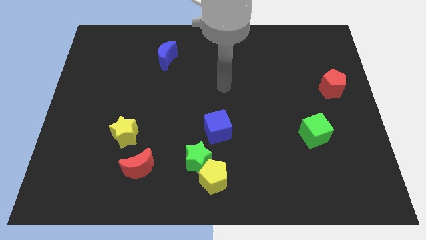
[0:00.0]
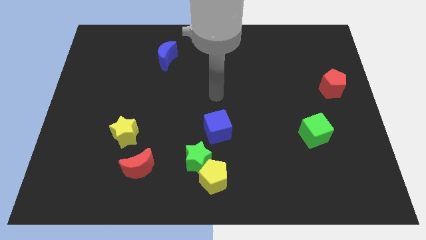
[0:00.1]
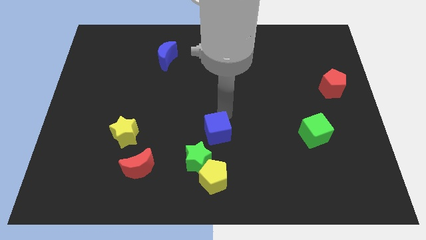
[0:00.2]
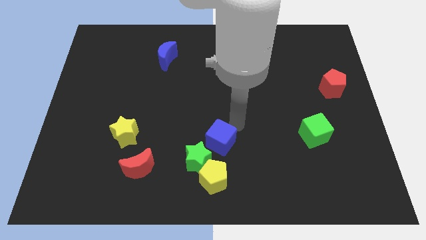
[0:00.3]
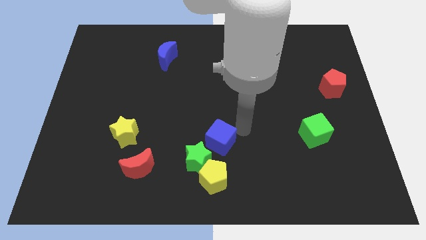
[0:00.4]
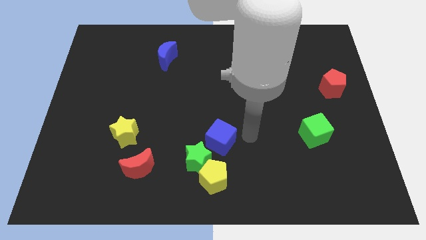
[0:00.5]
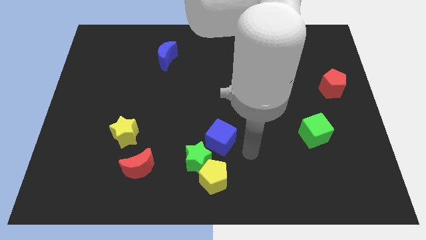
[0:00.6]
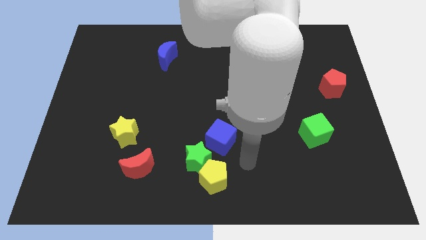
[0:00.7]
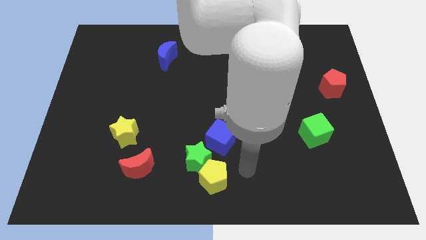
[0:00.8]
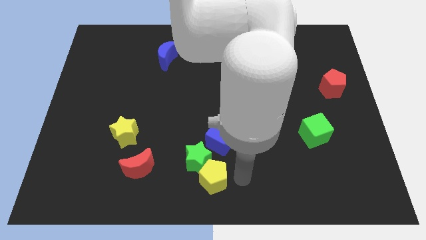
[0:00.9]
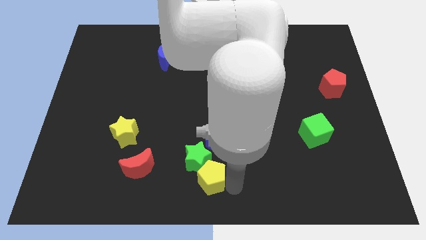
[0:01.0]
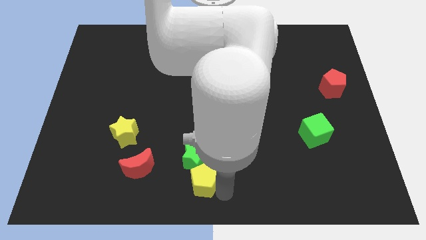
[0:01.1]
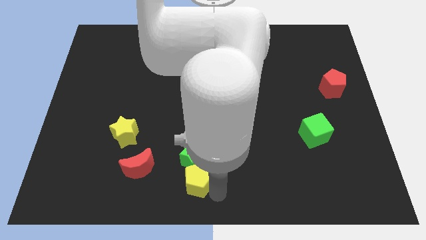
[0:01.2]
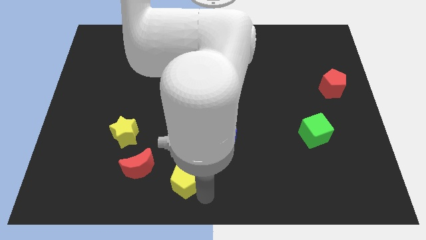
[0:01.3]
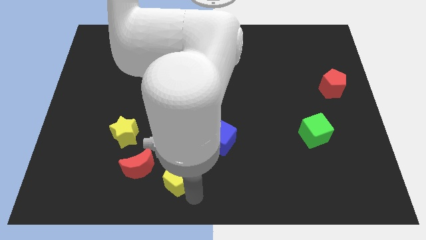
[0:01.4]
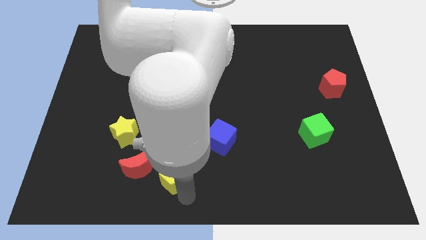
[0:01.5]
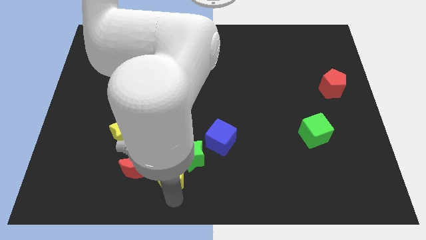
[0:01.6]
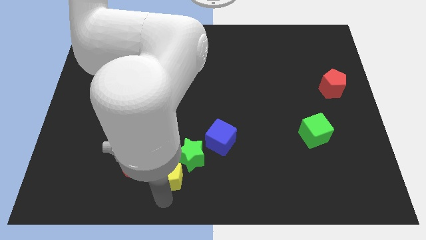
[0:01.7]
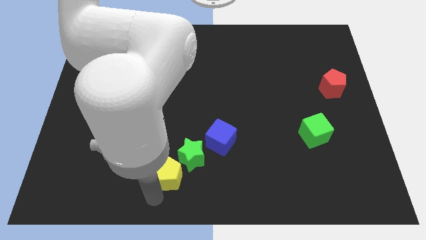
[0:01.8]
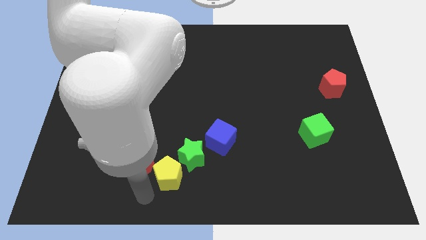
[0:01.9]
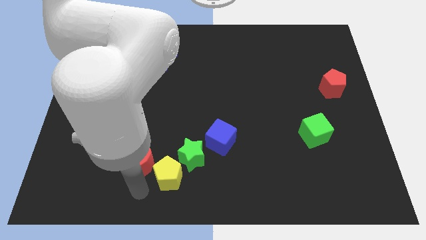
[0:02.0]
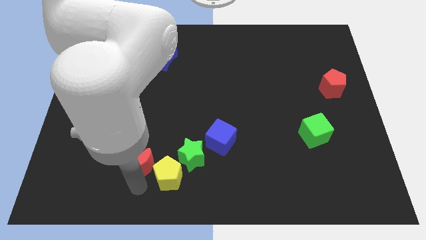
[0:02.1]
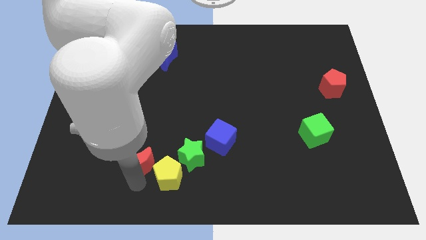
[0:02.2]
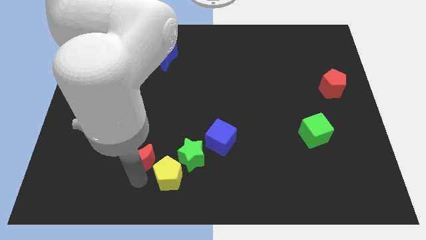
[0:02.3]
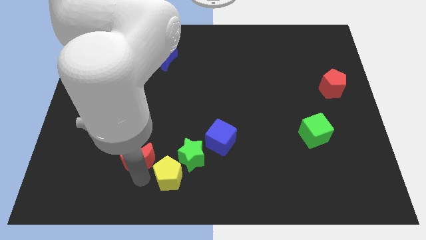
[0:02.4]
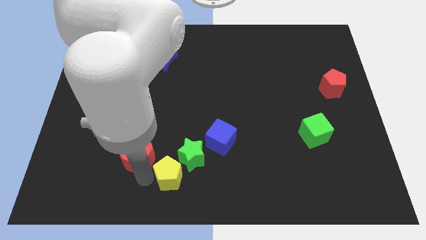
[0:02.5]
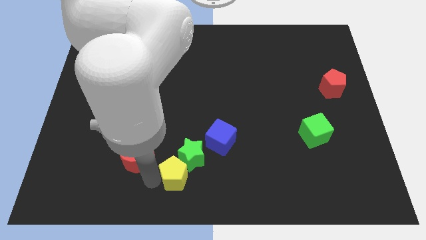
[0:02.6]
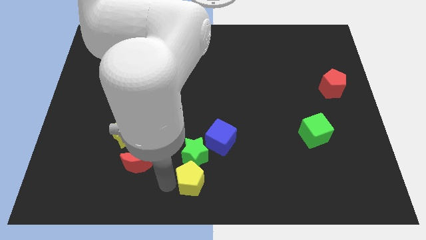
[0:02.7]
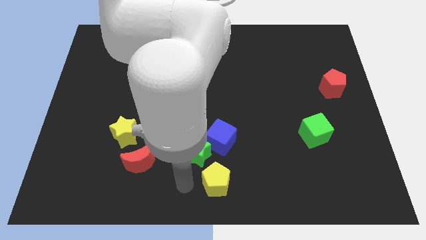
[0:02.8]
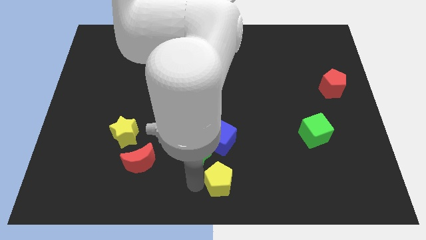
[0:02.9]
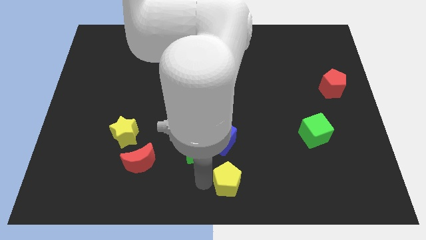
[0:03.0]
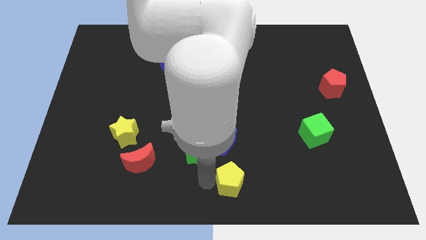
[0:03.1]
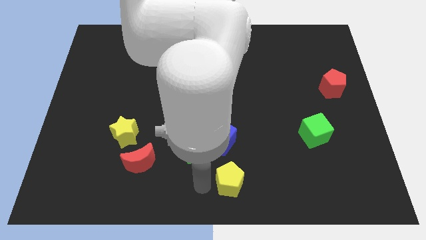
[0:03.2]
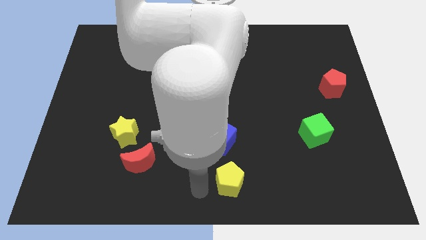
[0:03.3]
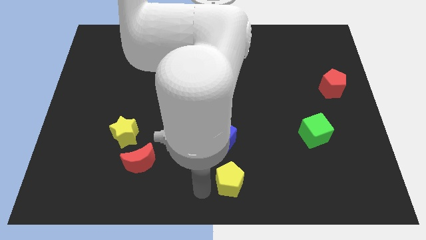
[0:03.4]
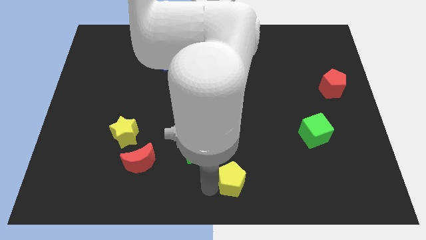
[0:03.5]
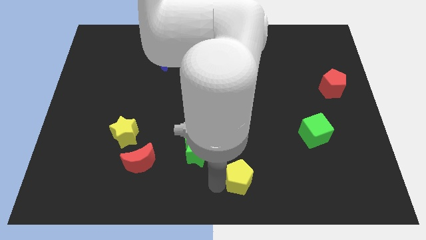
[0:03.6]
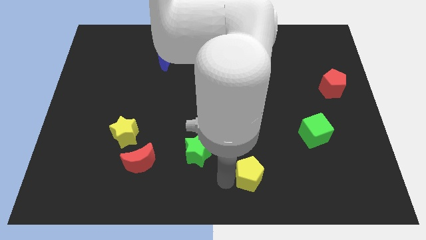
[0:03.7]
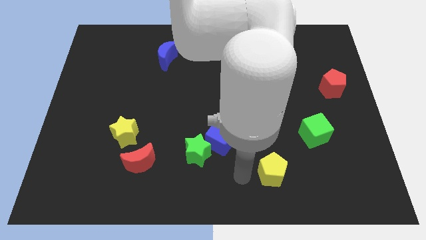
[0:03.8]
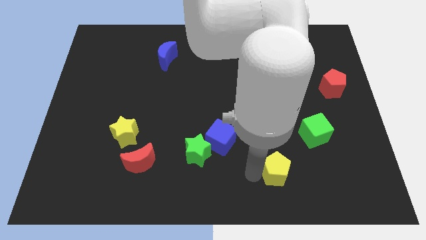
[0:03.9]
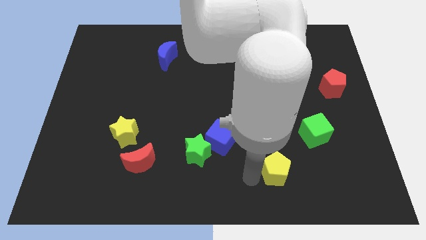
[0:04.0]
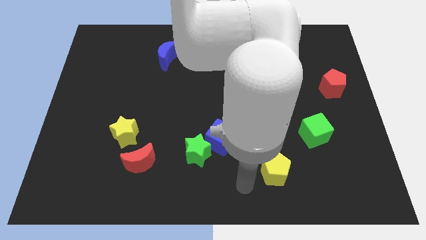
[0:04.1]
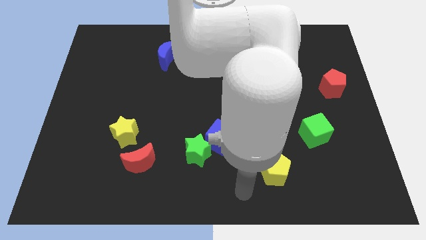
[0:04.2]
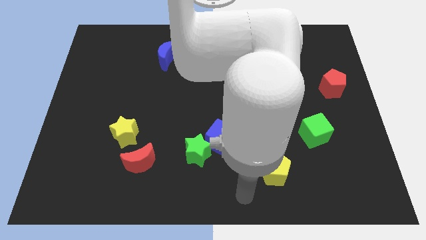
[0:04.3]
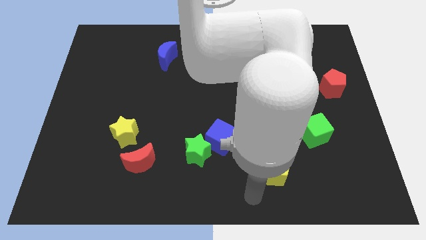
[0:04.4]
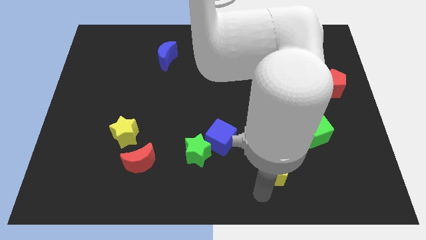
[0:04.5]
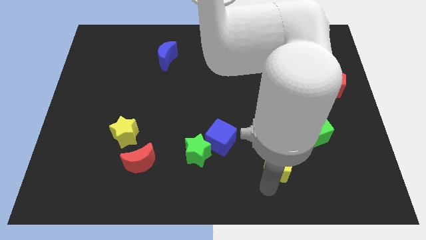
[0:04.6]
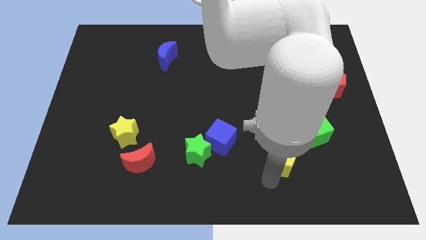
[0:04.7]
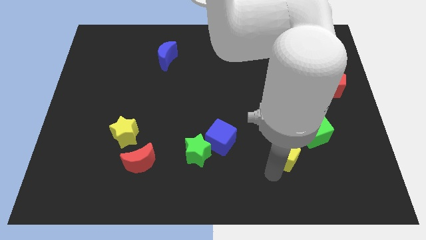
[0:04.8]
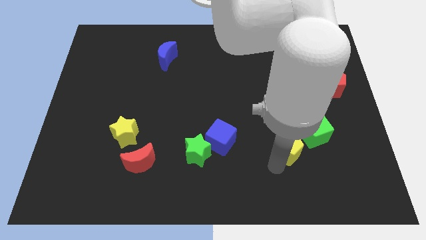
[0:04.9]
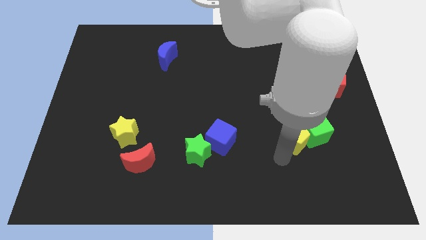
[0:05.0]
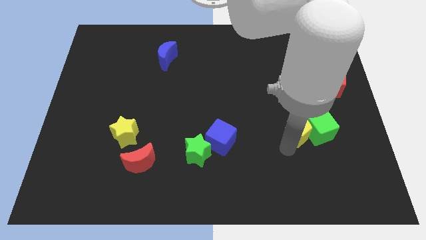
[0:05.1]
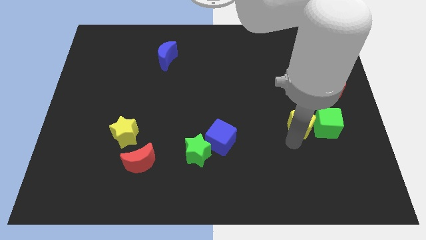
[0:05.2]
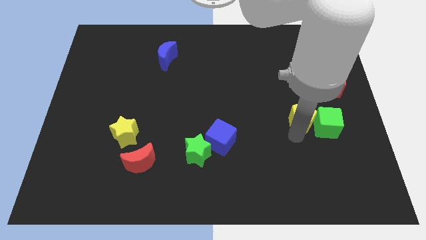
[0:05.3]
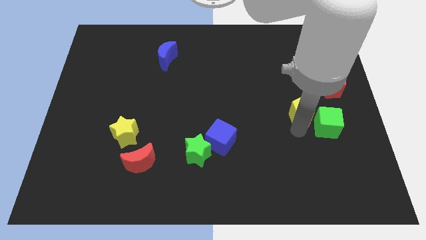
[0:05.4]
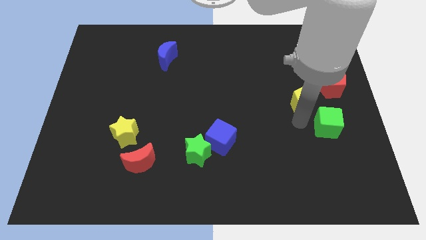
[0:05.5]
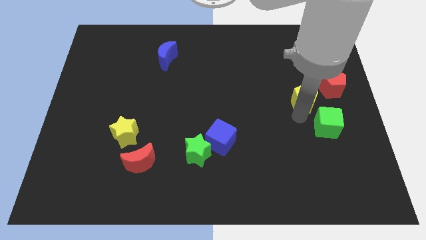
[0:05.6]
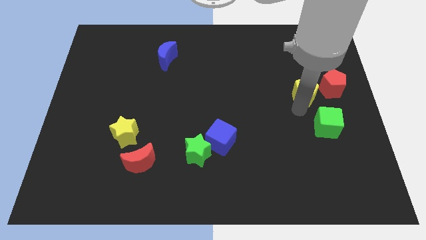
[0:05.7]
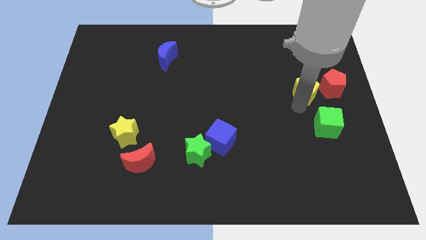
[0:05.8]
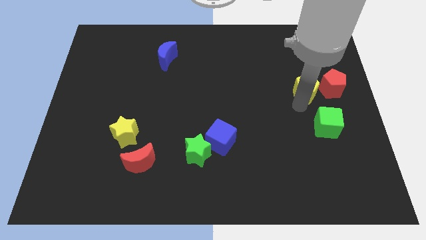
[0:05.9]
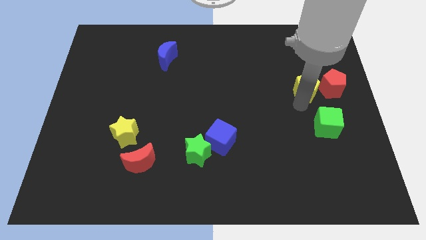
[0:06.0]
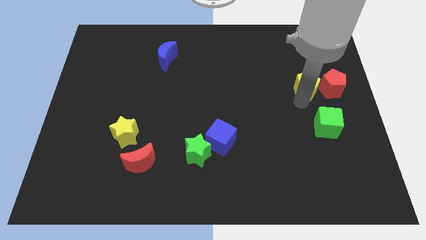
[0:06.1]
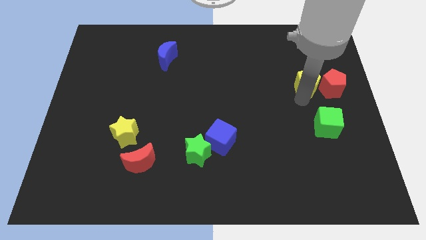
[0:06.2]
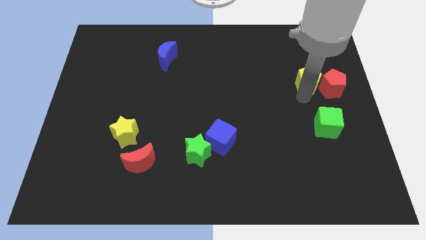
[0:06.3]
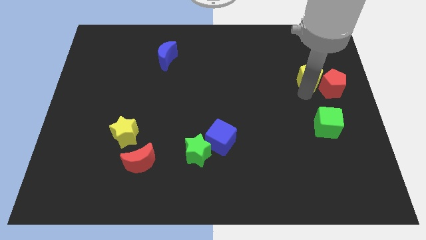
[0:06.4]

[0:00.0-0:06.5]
move the yellow pentagon towards the red pentagon

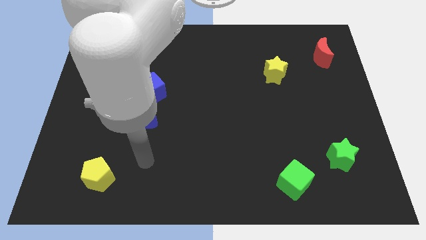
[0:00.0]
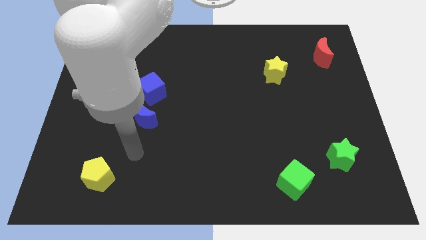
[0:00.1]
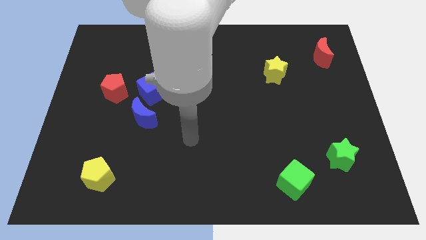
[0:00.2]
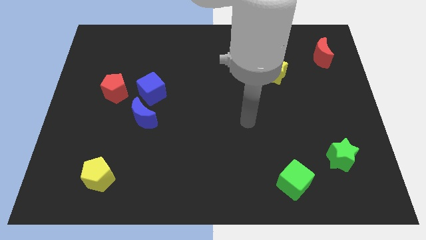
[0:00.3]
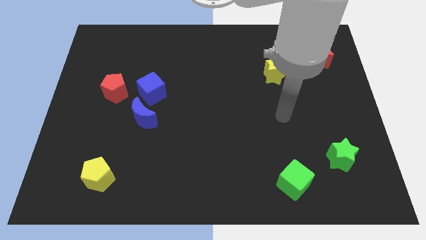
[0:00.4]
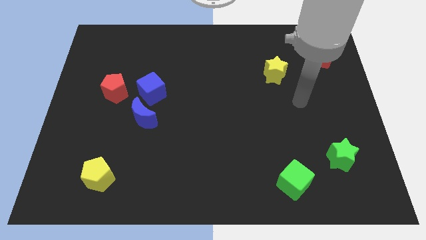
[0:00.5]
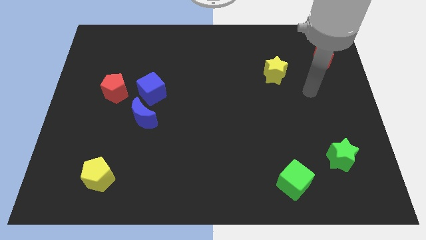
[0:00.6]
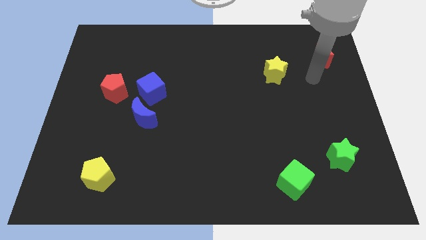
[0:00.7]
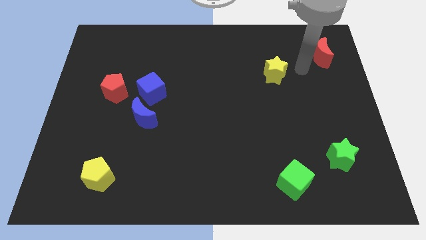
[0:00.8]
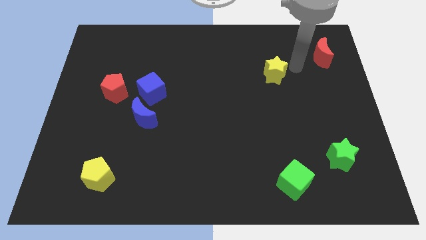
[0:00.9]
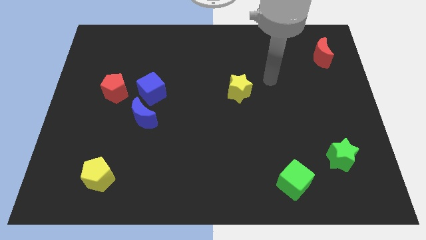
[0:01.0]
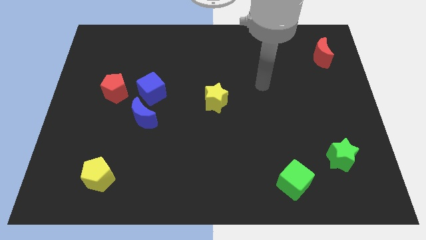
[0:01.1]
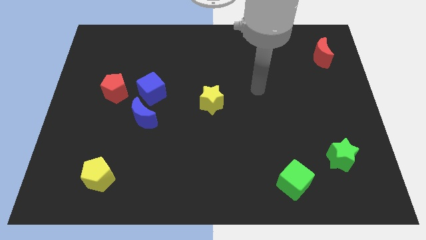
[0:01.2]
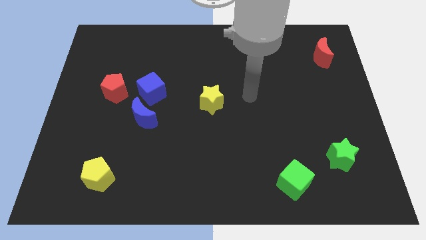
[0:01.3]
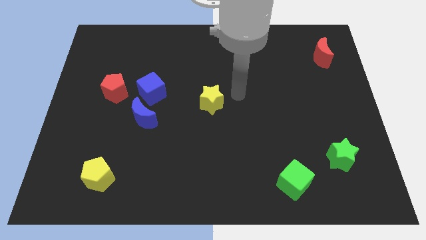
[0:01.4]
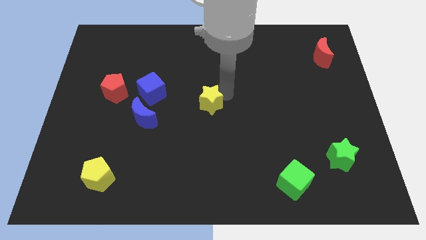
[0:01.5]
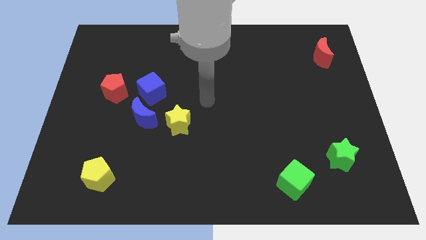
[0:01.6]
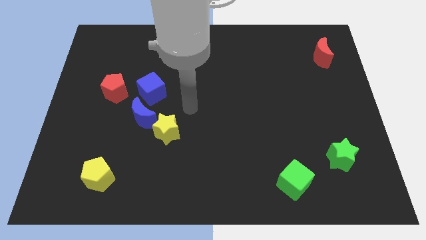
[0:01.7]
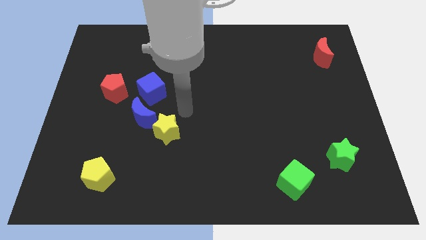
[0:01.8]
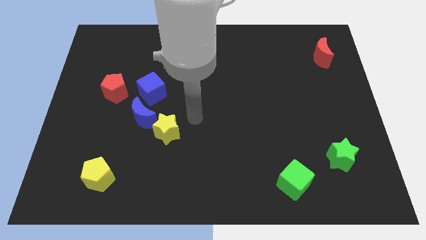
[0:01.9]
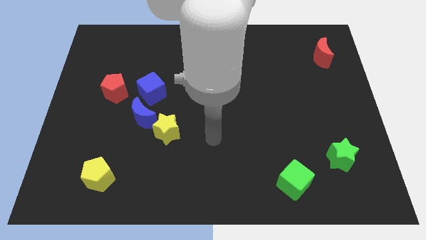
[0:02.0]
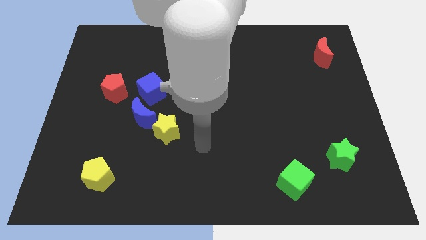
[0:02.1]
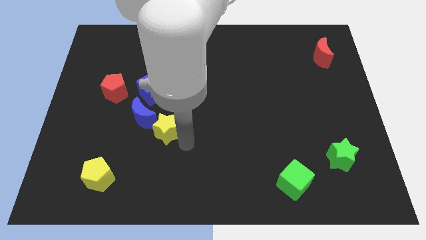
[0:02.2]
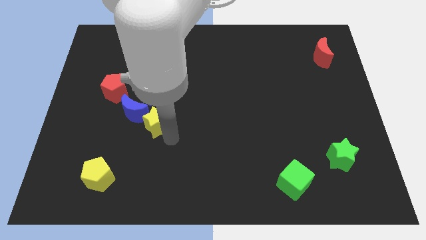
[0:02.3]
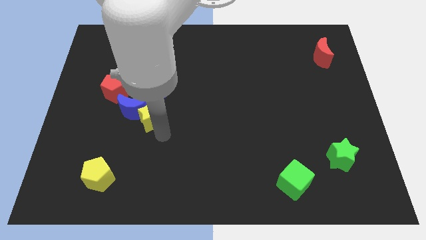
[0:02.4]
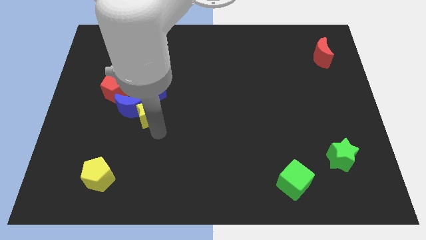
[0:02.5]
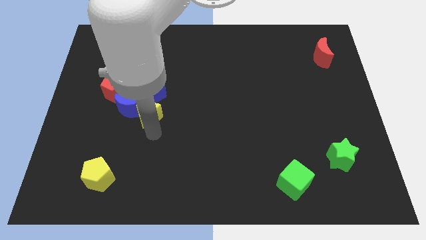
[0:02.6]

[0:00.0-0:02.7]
slide the yellow star close to the blue moon
